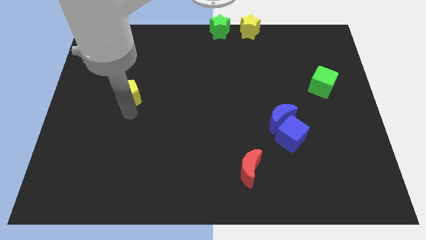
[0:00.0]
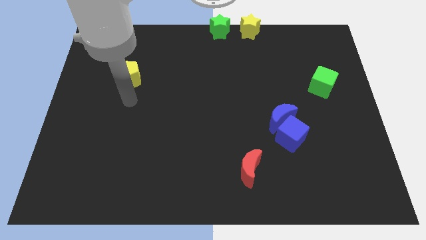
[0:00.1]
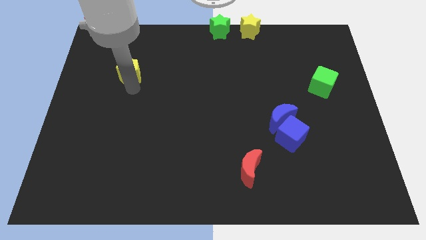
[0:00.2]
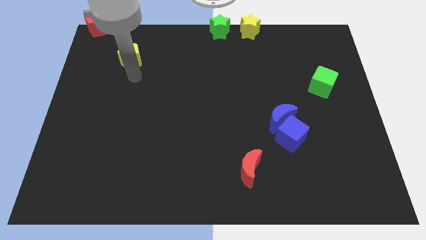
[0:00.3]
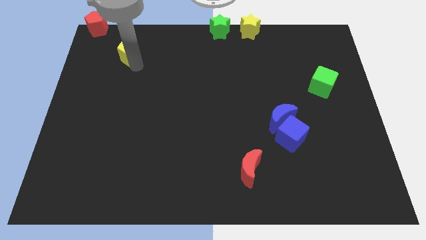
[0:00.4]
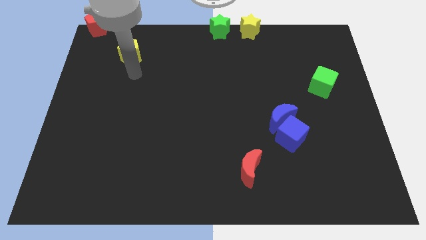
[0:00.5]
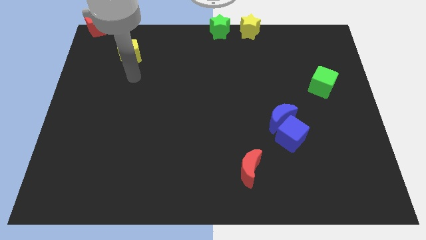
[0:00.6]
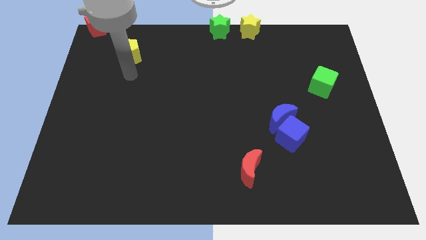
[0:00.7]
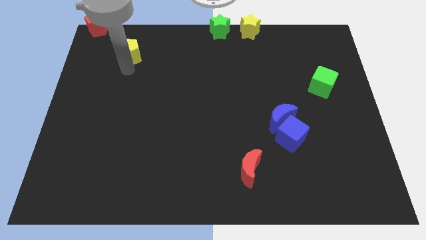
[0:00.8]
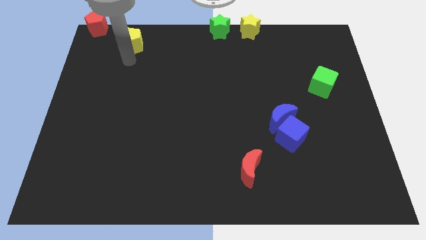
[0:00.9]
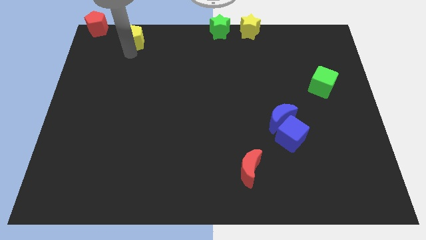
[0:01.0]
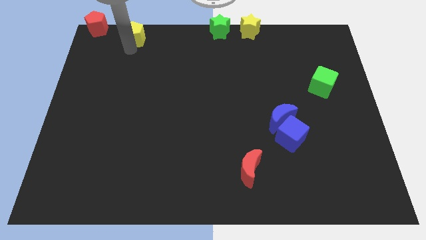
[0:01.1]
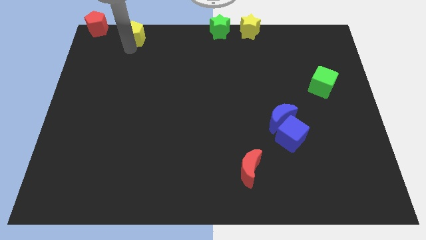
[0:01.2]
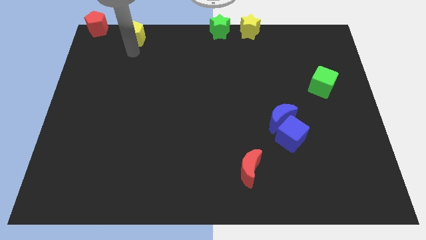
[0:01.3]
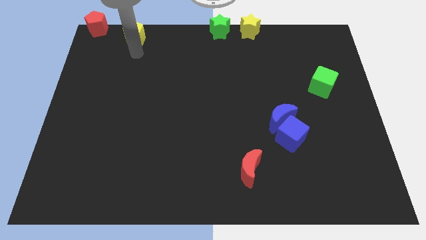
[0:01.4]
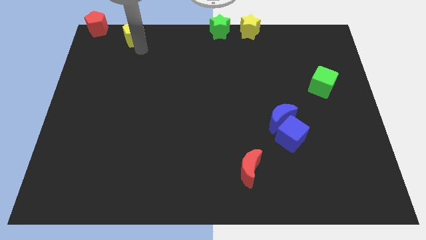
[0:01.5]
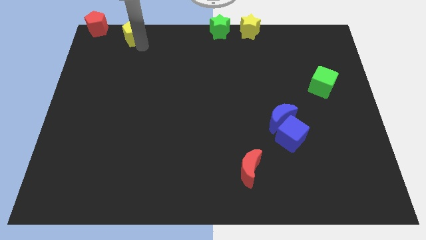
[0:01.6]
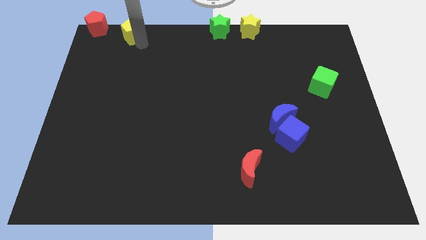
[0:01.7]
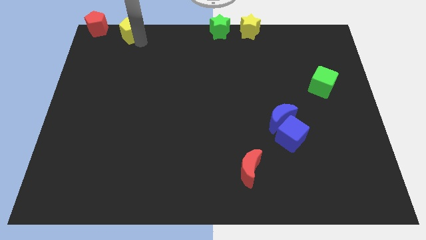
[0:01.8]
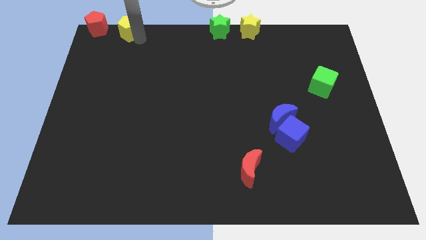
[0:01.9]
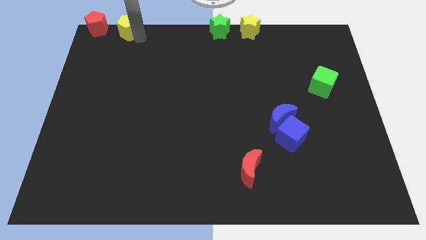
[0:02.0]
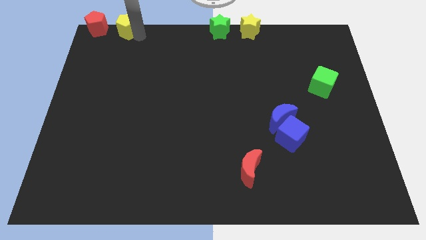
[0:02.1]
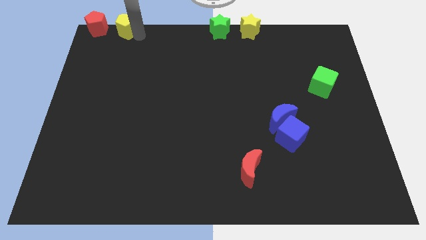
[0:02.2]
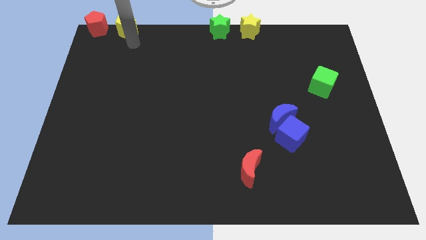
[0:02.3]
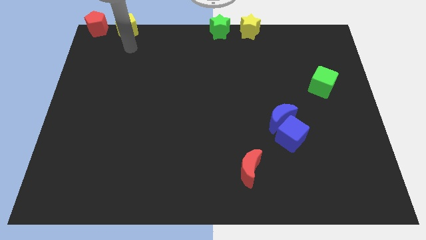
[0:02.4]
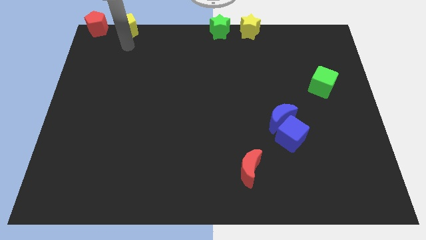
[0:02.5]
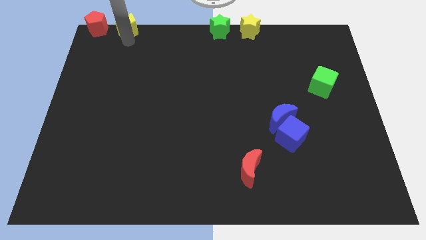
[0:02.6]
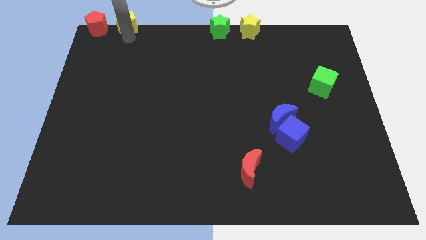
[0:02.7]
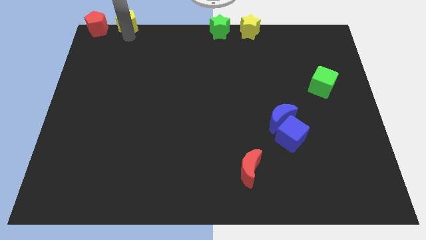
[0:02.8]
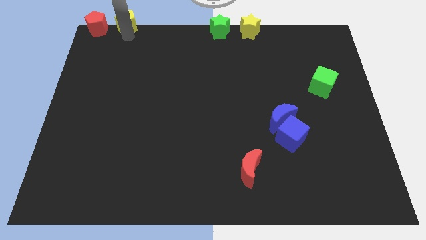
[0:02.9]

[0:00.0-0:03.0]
place the yellow penatgon to the right of red pentagon

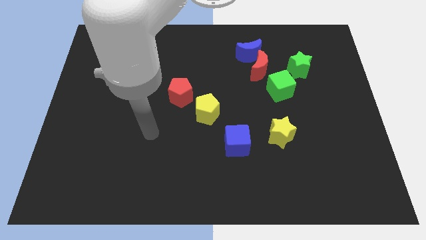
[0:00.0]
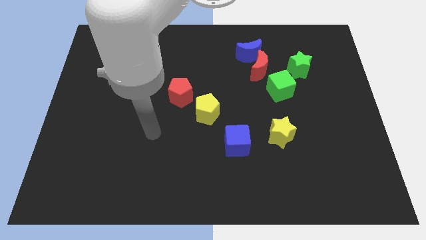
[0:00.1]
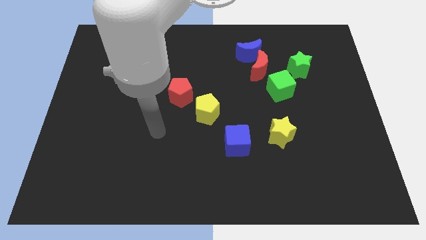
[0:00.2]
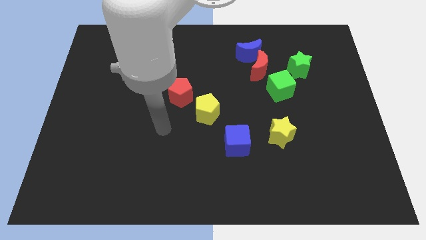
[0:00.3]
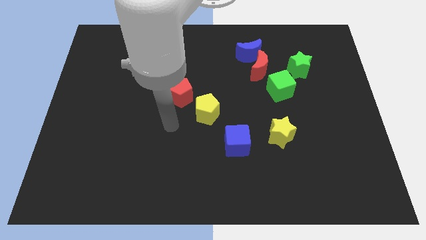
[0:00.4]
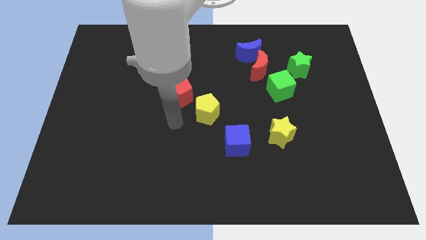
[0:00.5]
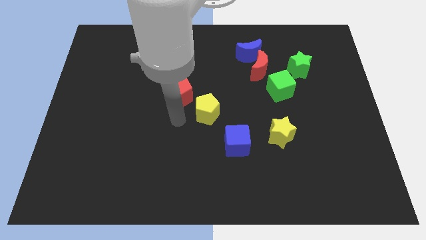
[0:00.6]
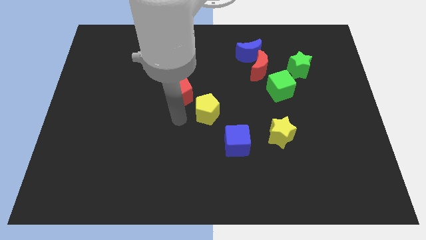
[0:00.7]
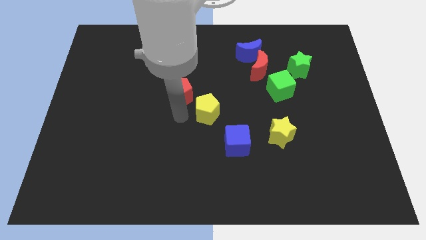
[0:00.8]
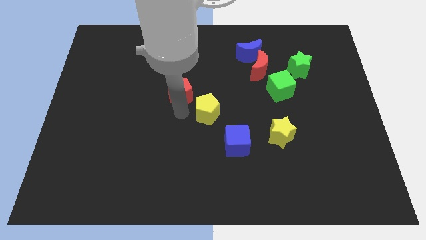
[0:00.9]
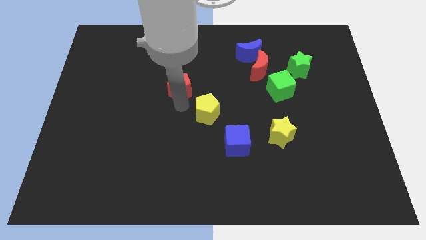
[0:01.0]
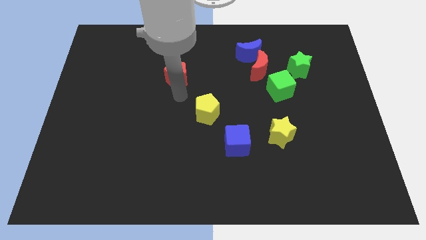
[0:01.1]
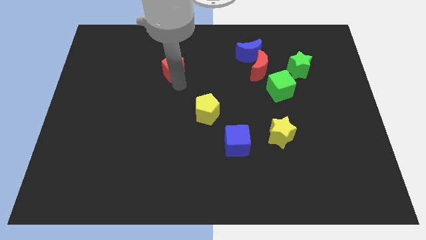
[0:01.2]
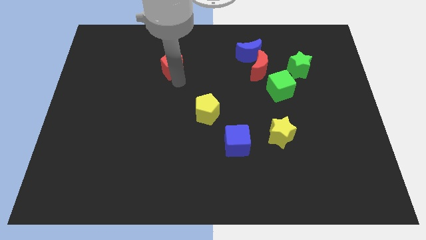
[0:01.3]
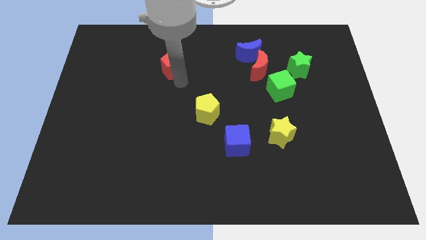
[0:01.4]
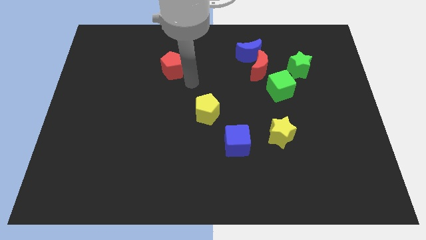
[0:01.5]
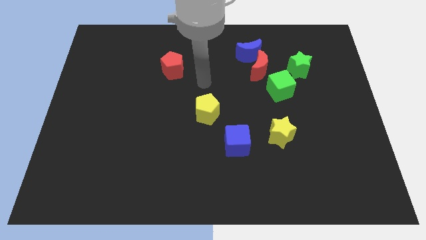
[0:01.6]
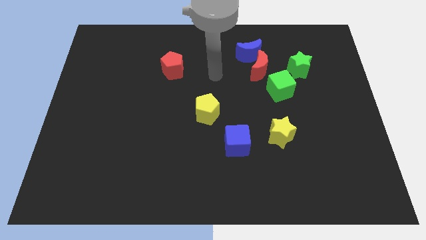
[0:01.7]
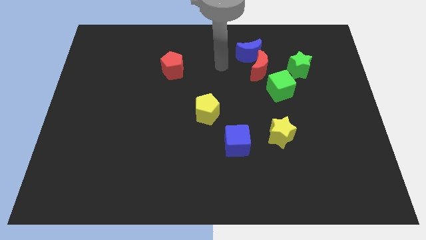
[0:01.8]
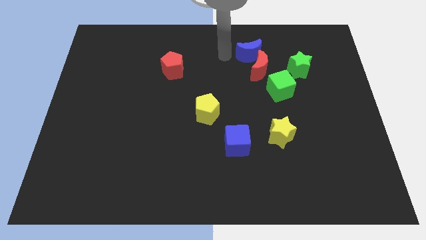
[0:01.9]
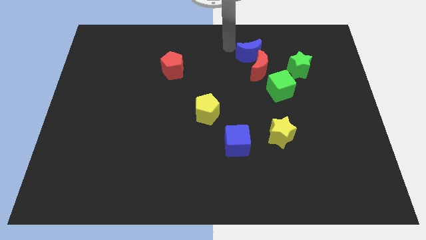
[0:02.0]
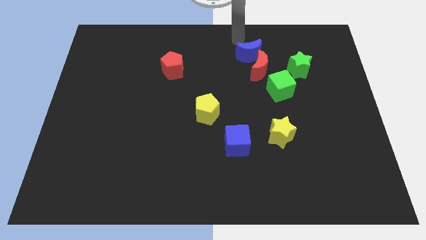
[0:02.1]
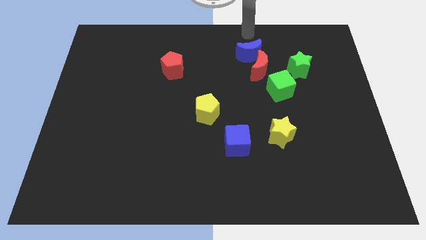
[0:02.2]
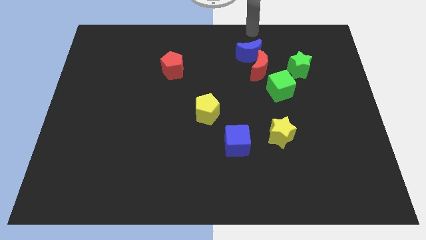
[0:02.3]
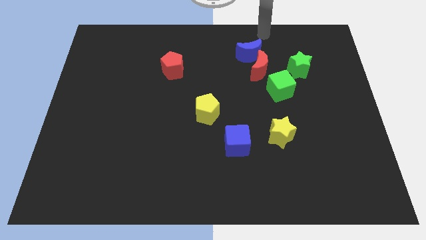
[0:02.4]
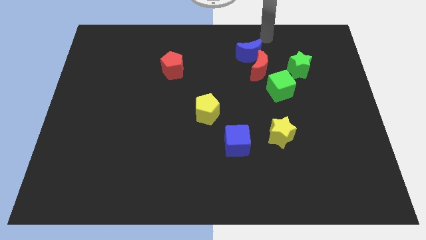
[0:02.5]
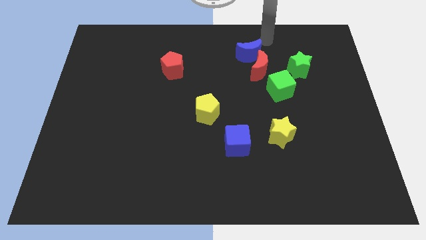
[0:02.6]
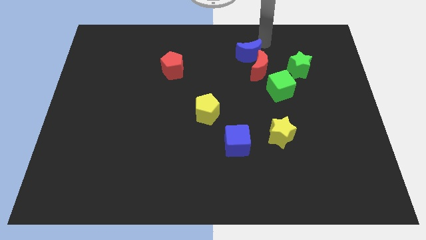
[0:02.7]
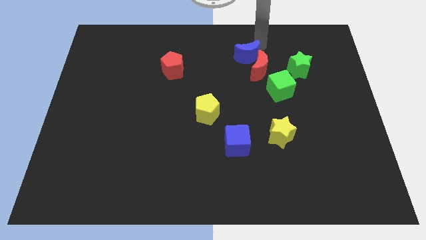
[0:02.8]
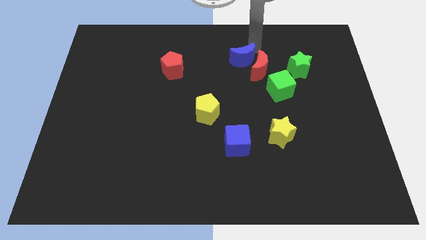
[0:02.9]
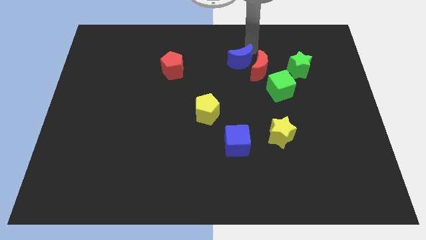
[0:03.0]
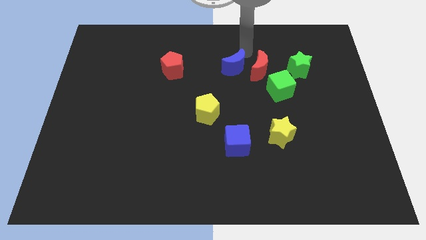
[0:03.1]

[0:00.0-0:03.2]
push the red pentagon slightly upwards parallel to the left of red crescent

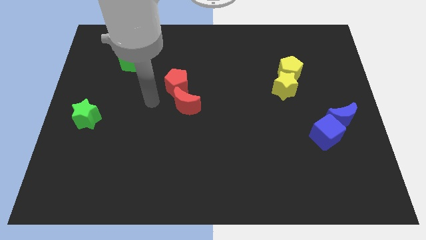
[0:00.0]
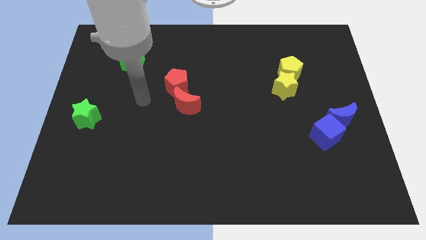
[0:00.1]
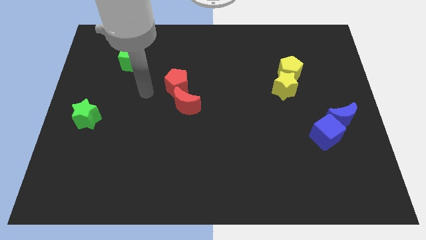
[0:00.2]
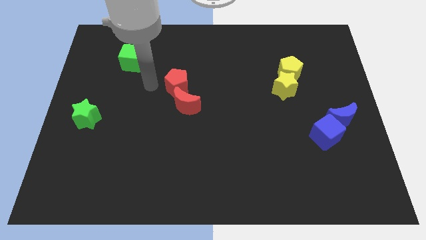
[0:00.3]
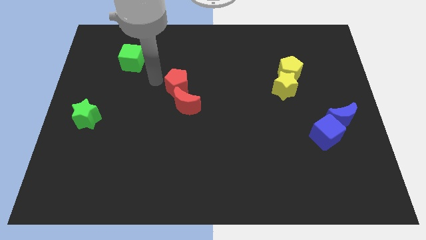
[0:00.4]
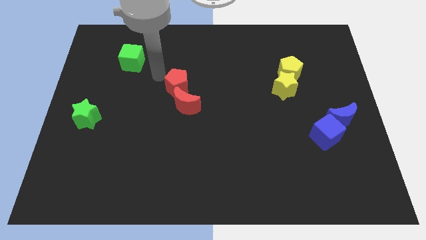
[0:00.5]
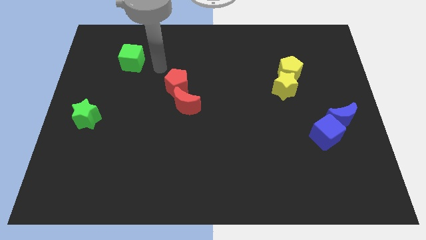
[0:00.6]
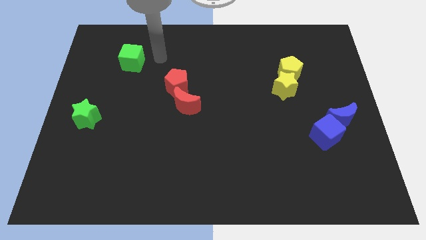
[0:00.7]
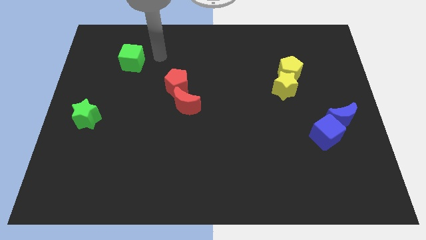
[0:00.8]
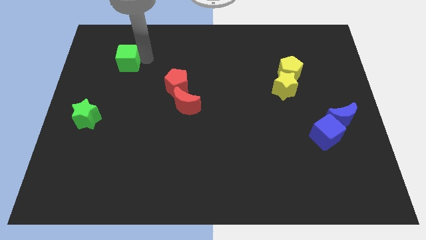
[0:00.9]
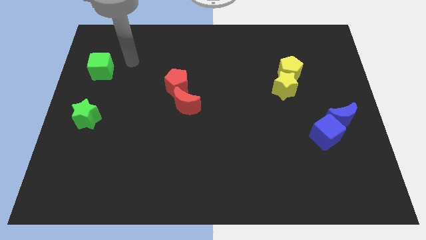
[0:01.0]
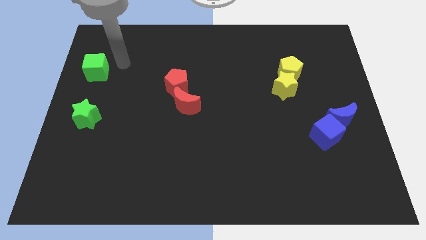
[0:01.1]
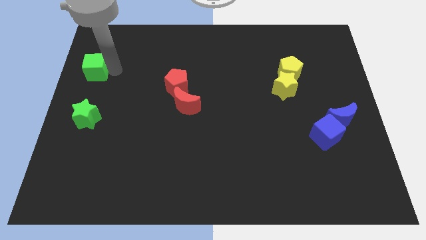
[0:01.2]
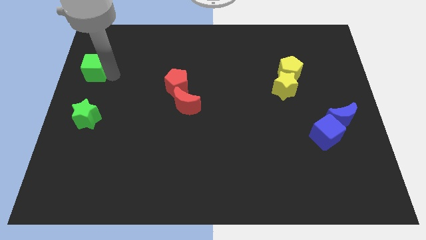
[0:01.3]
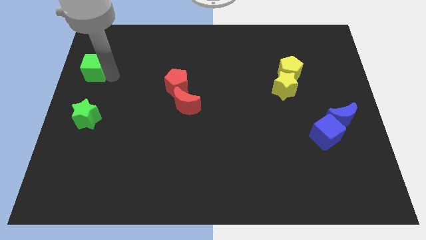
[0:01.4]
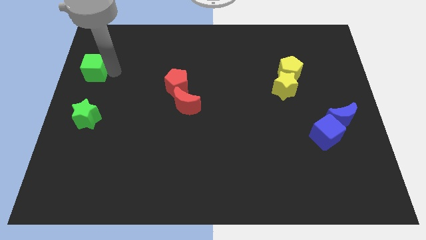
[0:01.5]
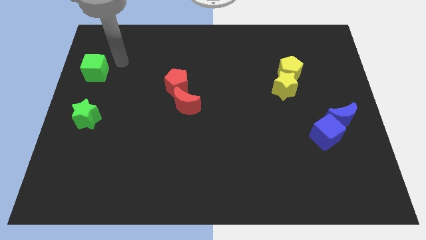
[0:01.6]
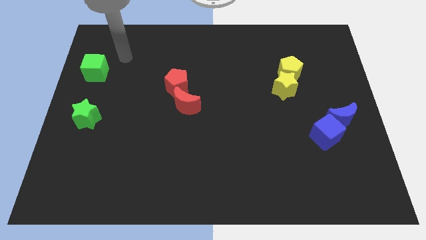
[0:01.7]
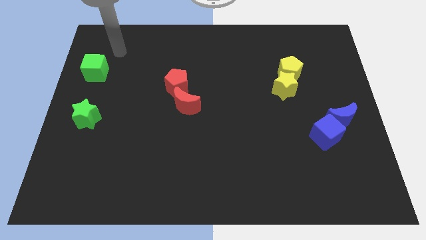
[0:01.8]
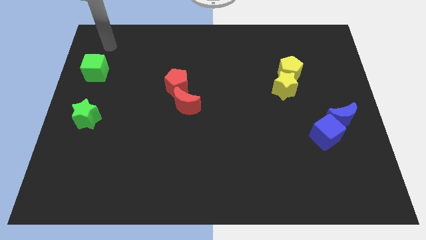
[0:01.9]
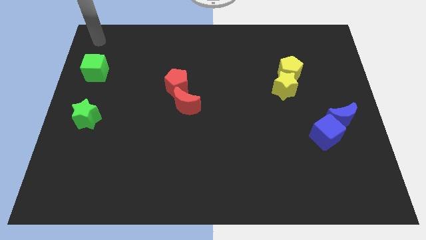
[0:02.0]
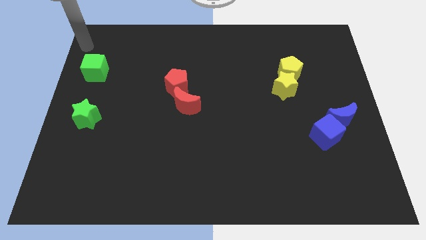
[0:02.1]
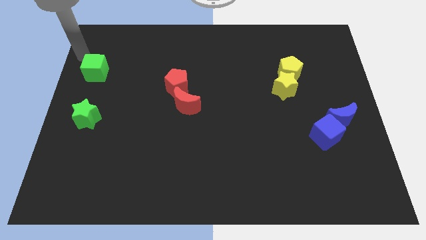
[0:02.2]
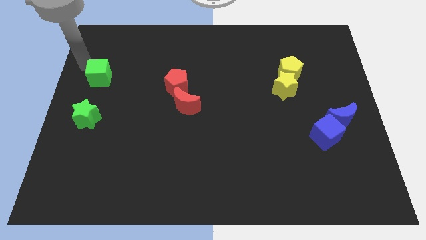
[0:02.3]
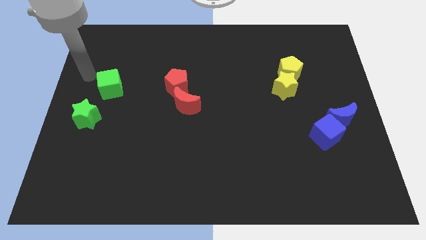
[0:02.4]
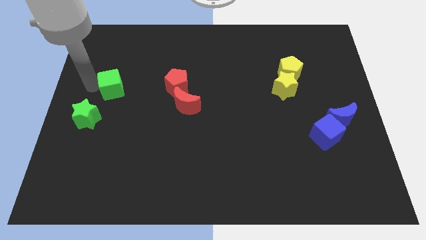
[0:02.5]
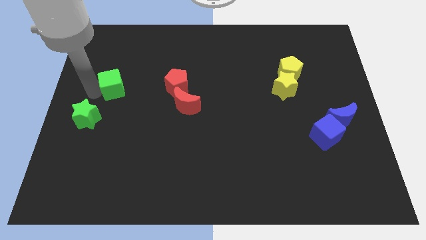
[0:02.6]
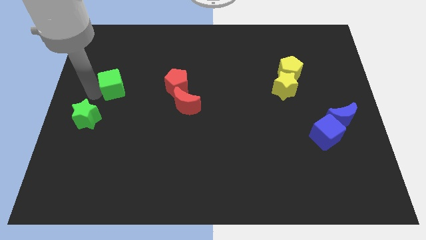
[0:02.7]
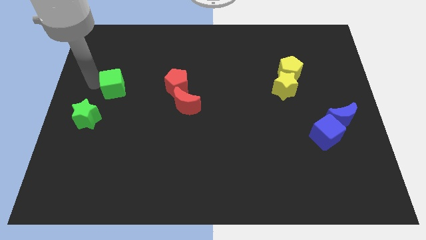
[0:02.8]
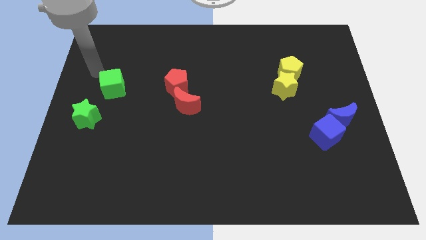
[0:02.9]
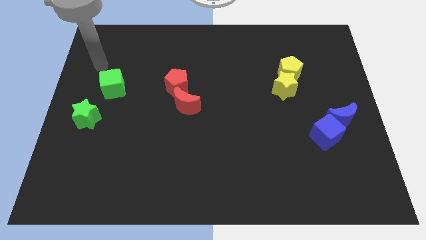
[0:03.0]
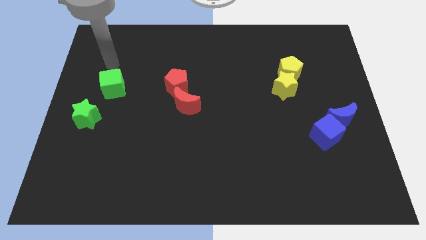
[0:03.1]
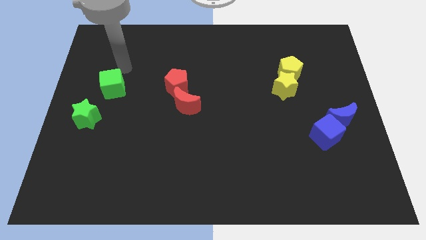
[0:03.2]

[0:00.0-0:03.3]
push the green cube to the top right of the green star
